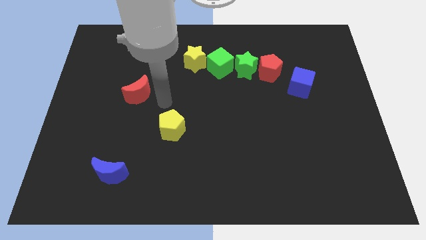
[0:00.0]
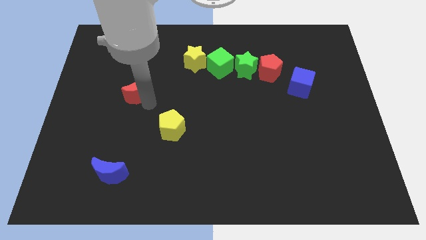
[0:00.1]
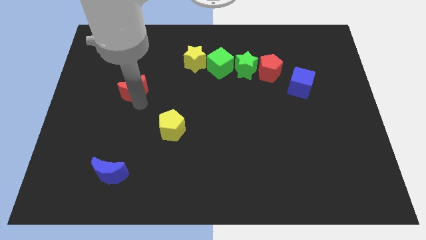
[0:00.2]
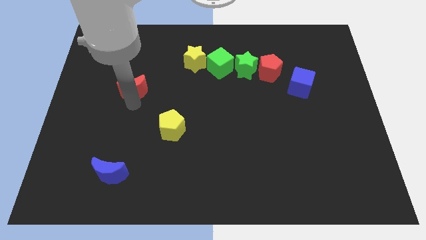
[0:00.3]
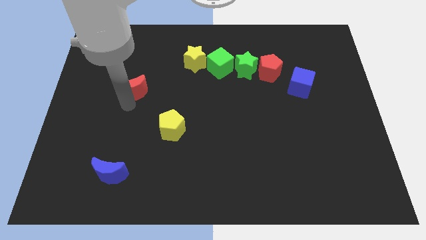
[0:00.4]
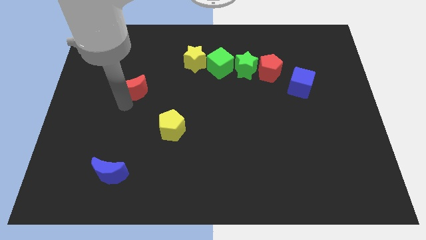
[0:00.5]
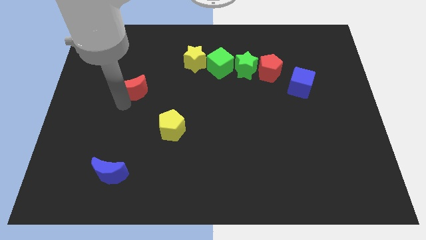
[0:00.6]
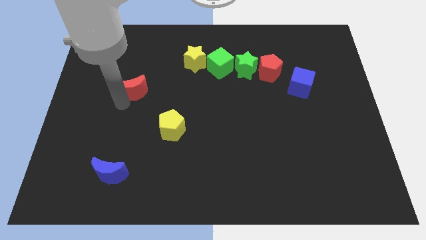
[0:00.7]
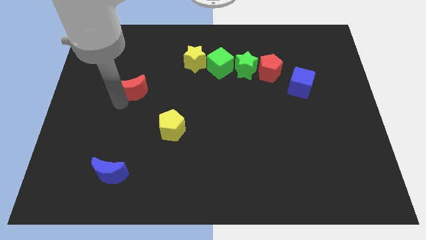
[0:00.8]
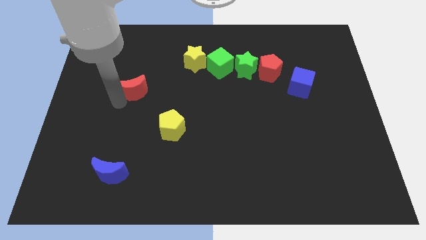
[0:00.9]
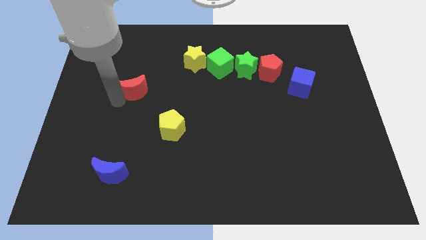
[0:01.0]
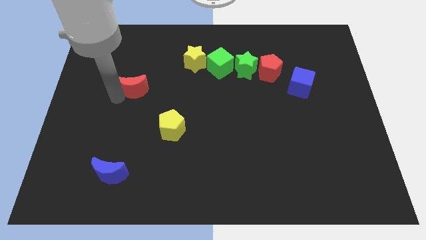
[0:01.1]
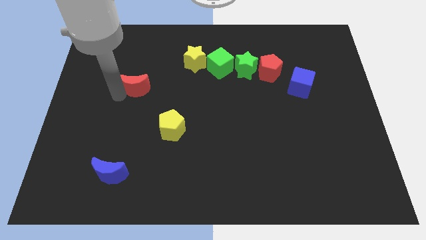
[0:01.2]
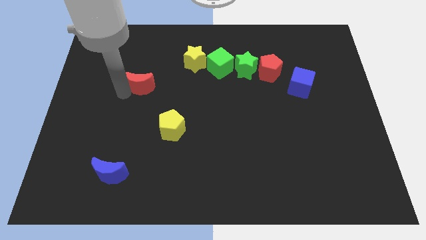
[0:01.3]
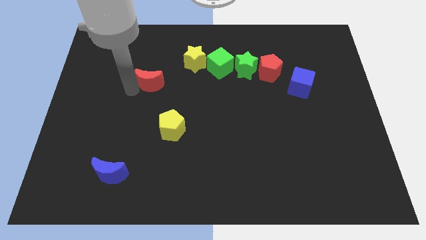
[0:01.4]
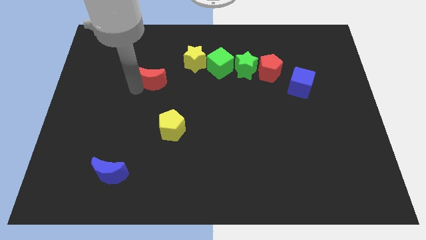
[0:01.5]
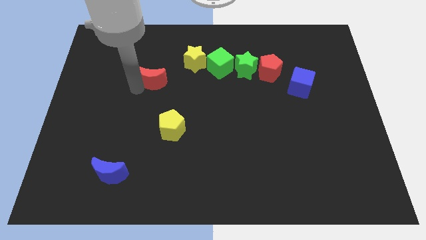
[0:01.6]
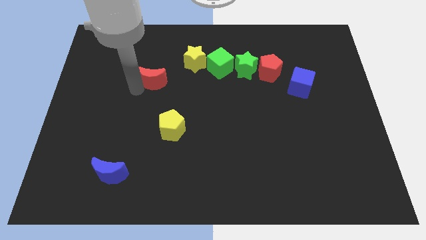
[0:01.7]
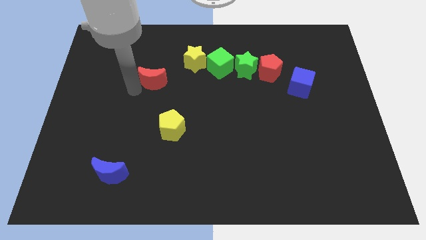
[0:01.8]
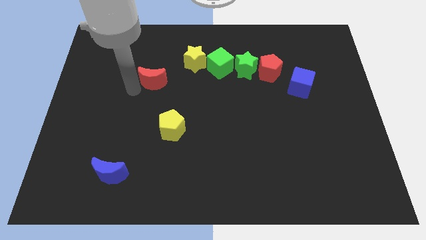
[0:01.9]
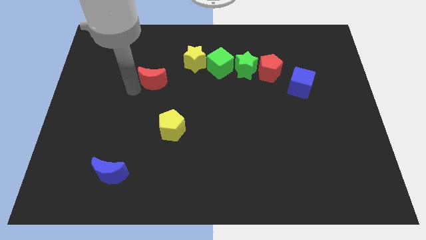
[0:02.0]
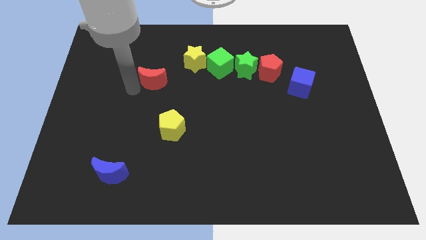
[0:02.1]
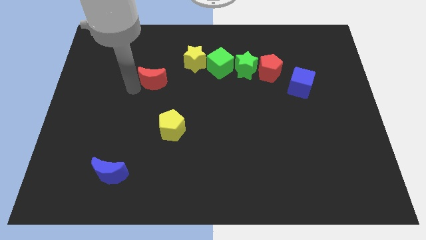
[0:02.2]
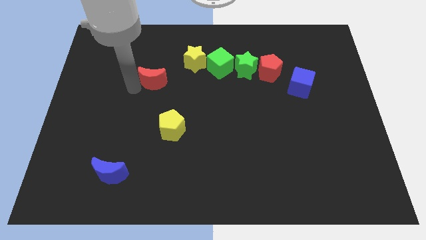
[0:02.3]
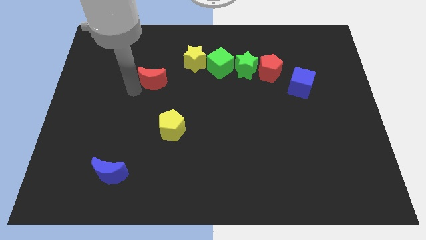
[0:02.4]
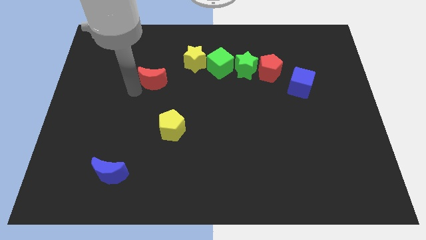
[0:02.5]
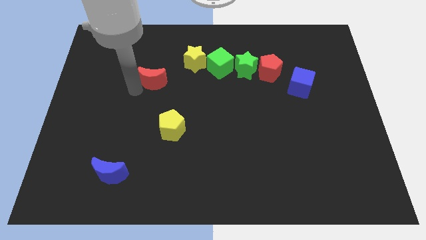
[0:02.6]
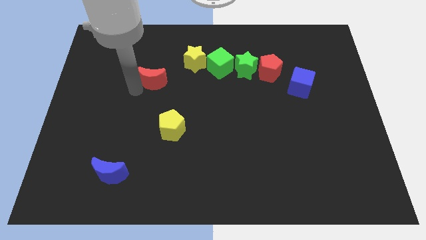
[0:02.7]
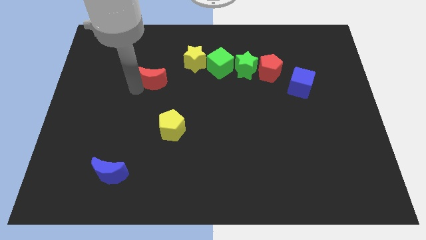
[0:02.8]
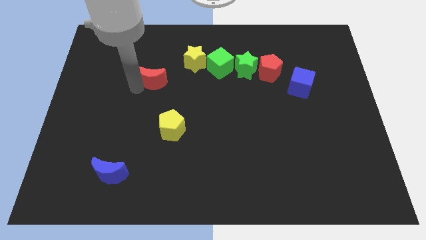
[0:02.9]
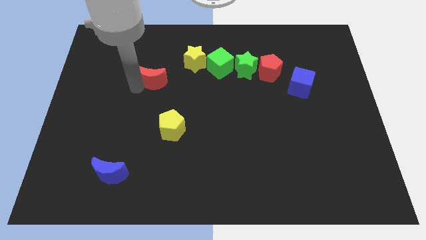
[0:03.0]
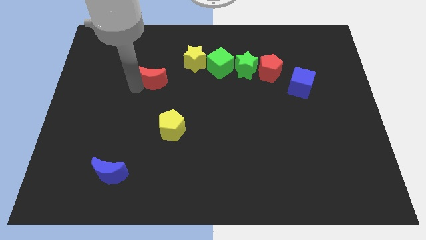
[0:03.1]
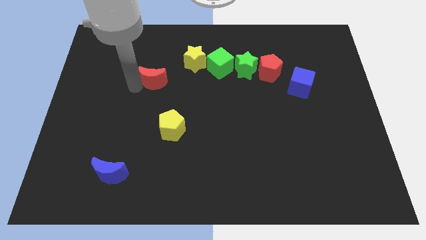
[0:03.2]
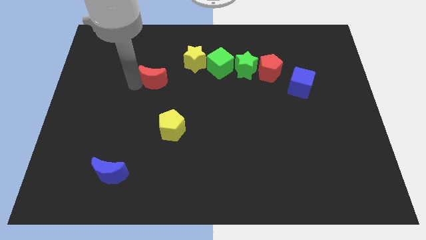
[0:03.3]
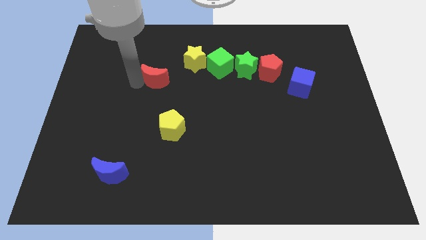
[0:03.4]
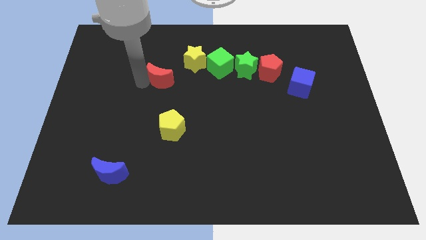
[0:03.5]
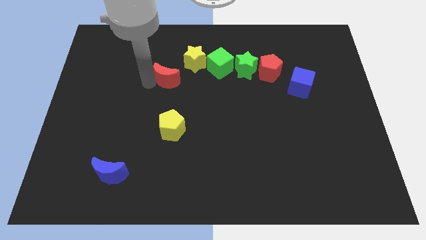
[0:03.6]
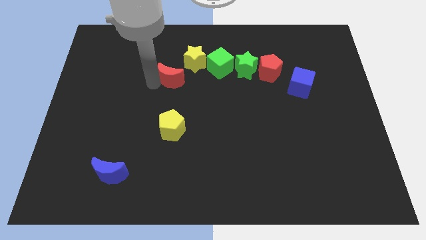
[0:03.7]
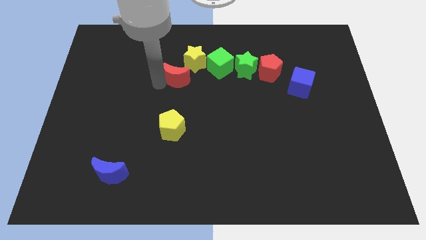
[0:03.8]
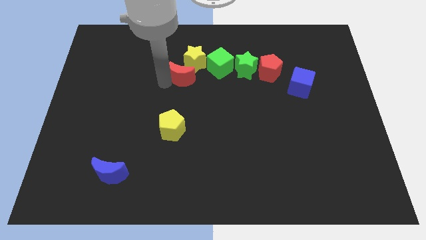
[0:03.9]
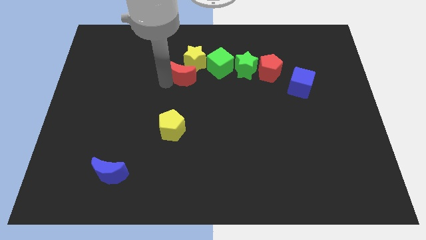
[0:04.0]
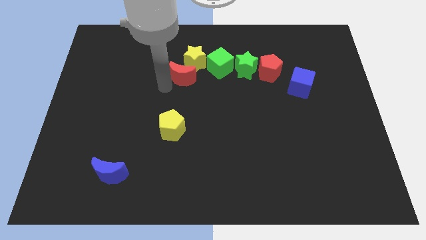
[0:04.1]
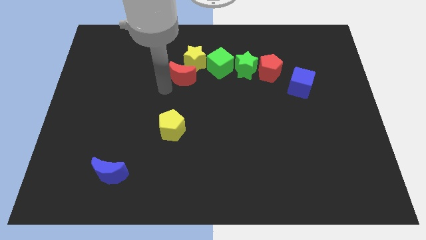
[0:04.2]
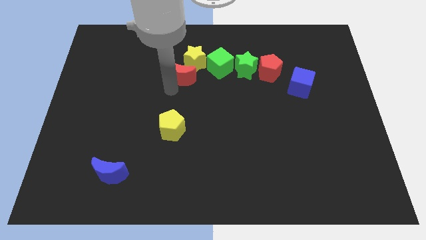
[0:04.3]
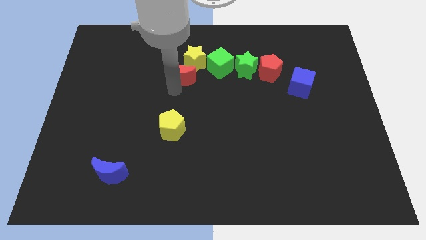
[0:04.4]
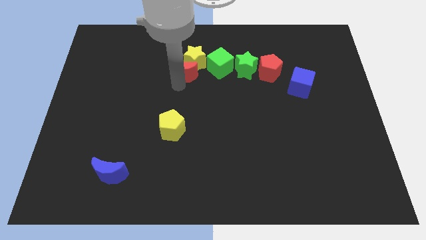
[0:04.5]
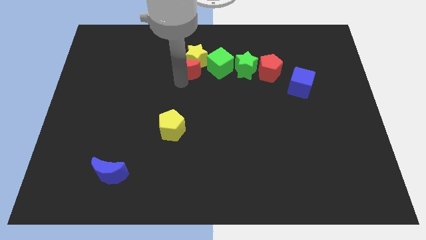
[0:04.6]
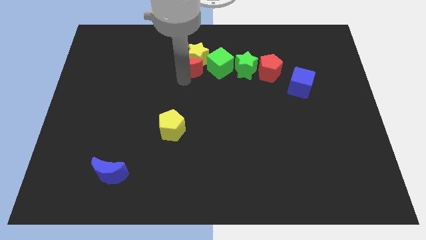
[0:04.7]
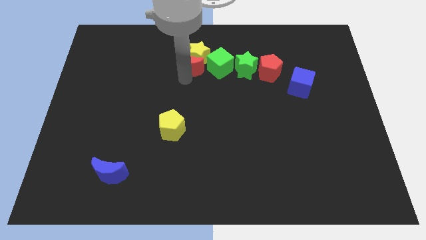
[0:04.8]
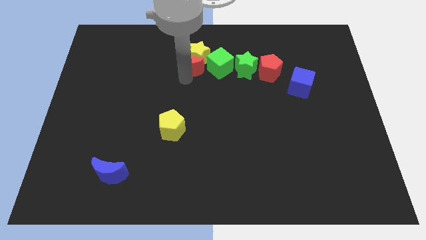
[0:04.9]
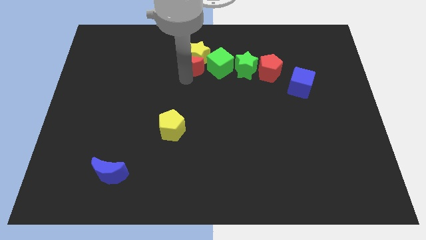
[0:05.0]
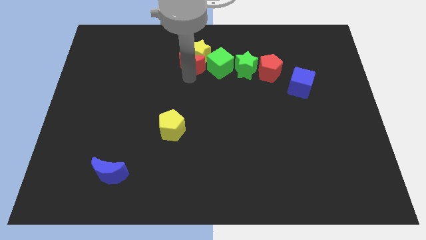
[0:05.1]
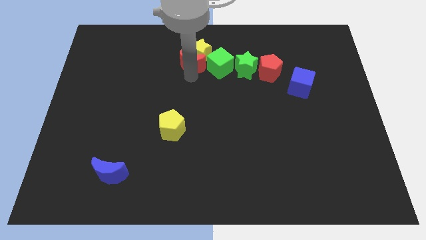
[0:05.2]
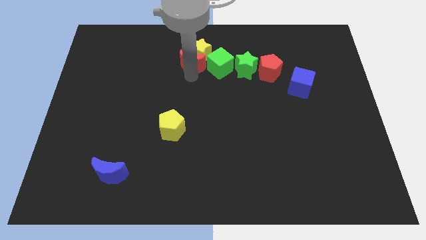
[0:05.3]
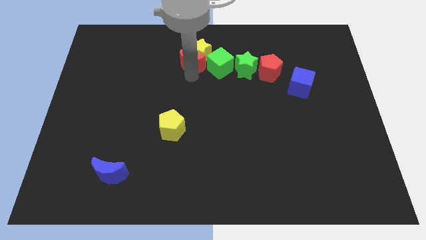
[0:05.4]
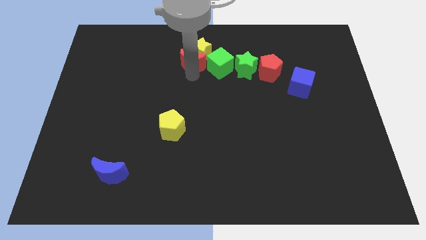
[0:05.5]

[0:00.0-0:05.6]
put the red crescent below the yellow star

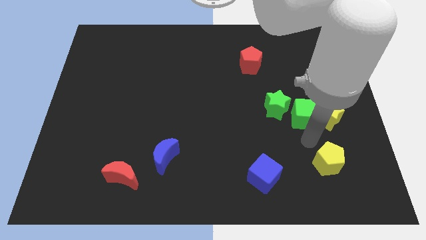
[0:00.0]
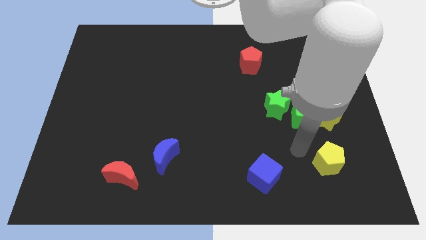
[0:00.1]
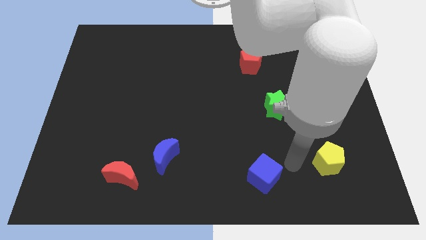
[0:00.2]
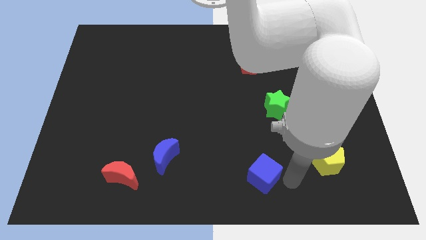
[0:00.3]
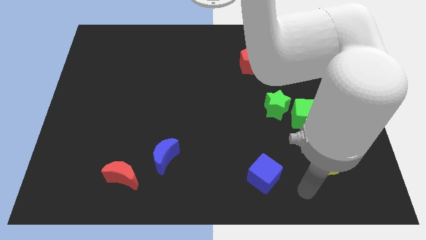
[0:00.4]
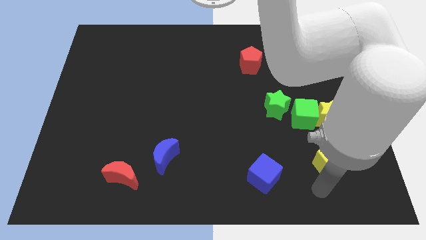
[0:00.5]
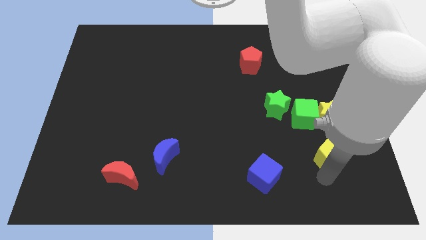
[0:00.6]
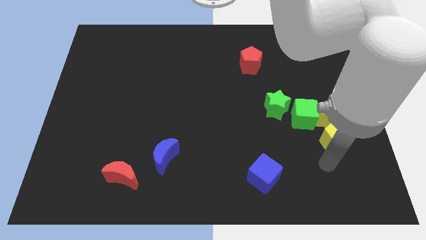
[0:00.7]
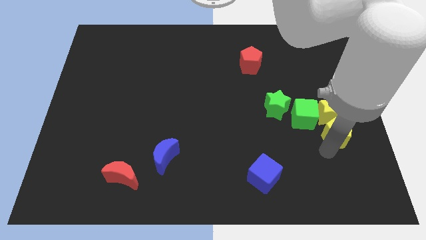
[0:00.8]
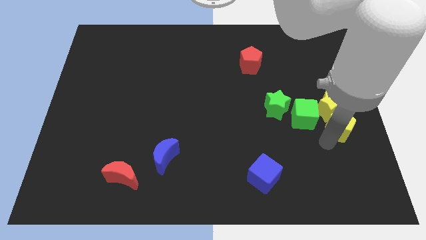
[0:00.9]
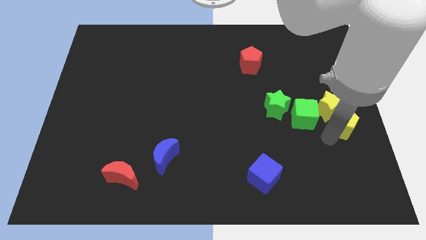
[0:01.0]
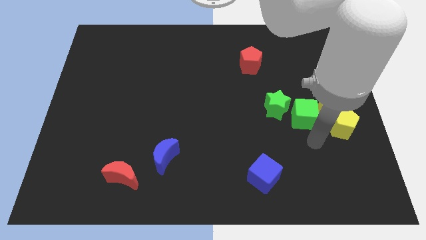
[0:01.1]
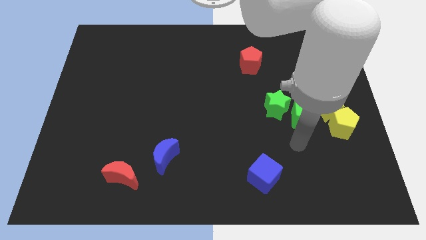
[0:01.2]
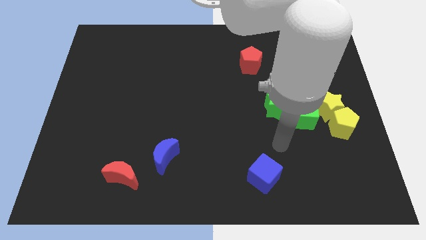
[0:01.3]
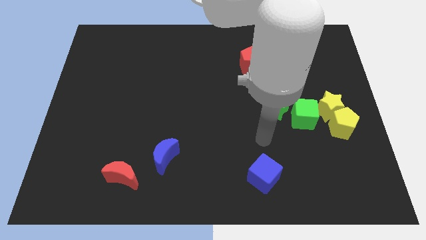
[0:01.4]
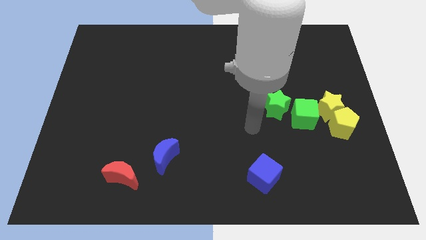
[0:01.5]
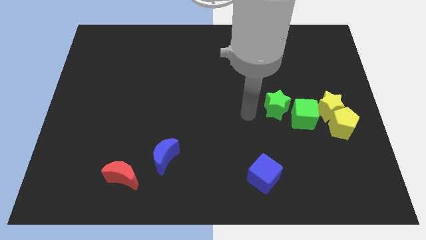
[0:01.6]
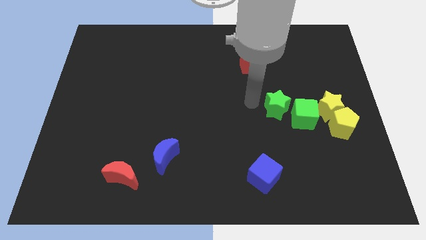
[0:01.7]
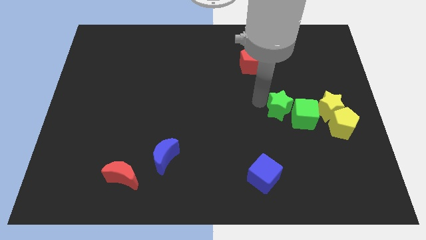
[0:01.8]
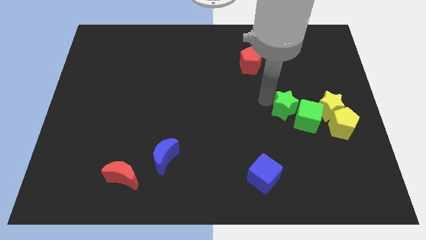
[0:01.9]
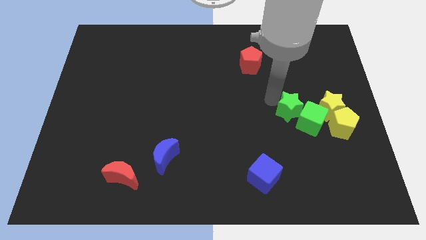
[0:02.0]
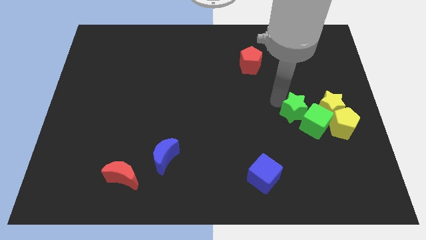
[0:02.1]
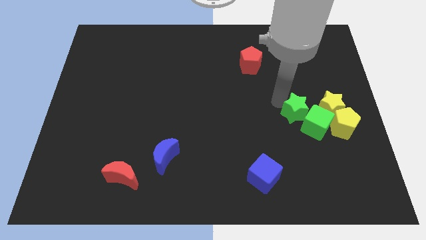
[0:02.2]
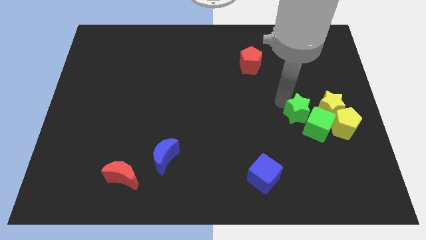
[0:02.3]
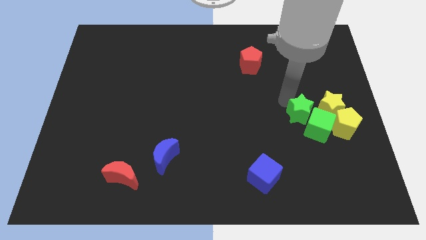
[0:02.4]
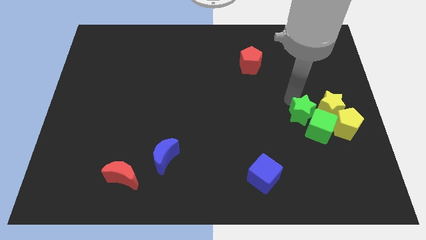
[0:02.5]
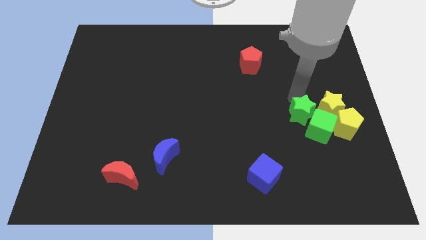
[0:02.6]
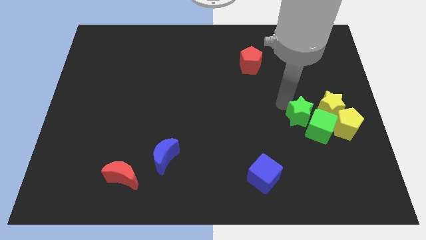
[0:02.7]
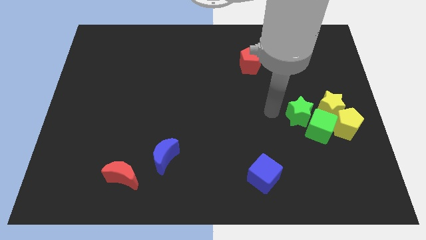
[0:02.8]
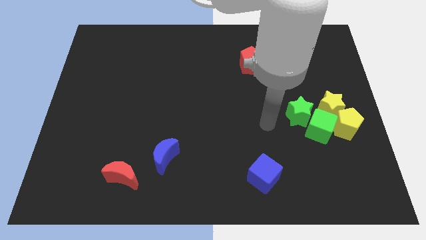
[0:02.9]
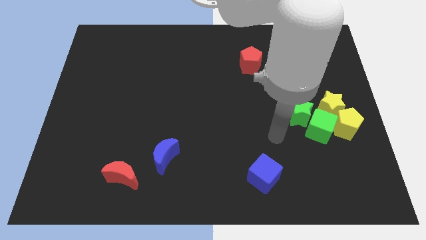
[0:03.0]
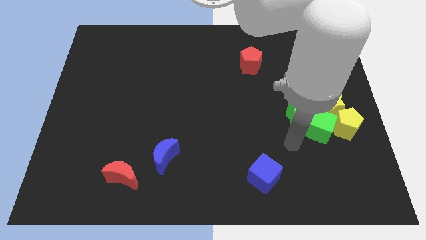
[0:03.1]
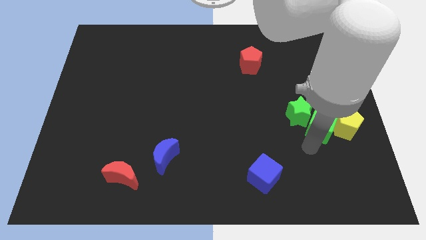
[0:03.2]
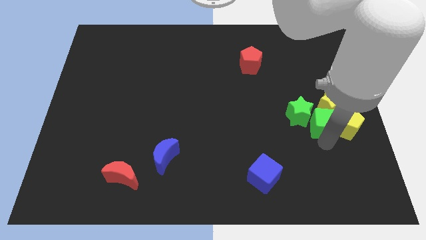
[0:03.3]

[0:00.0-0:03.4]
push the yellow pentagon slightly upwards
